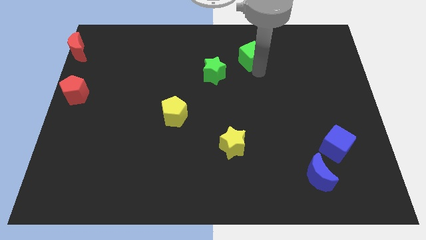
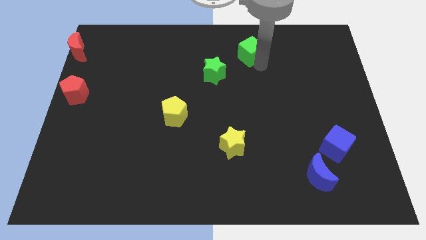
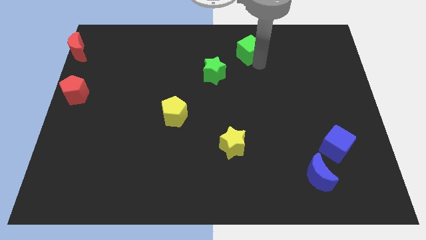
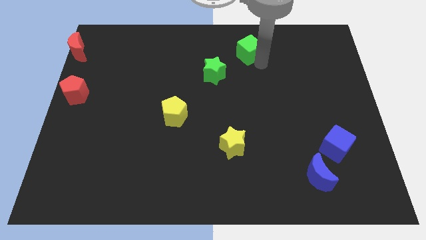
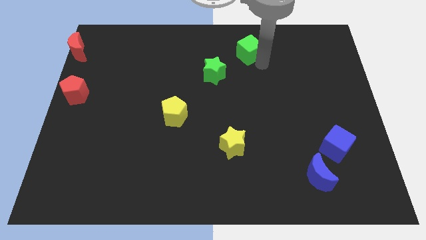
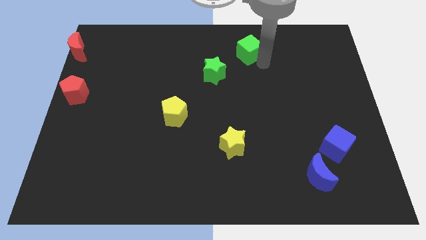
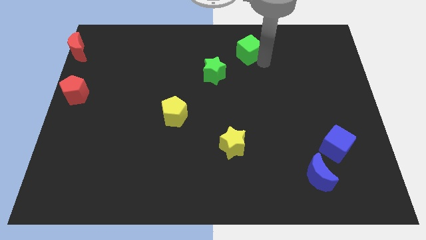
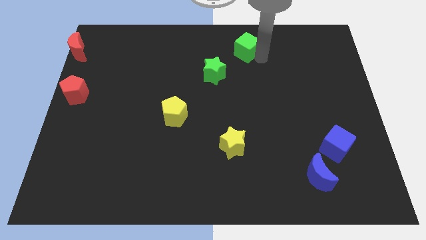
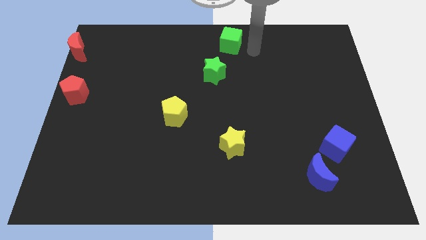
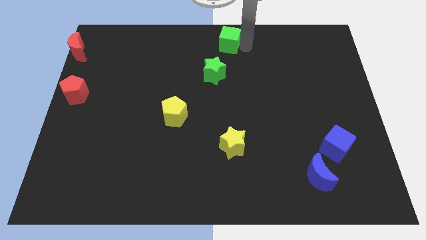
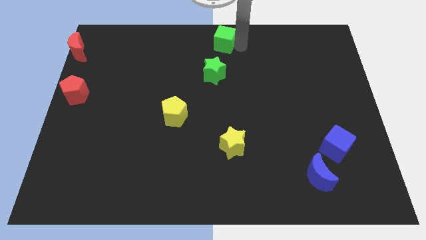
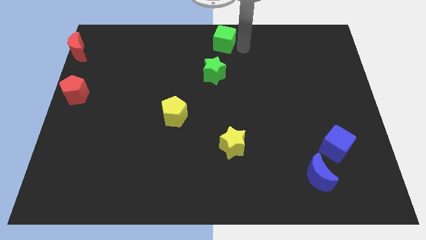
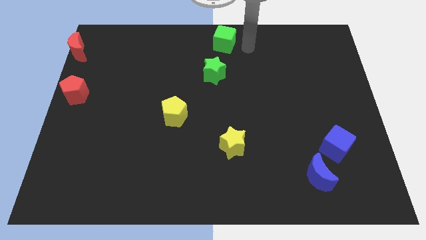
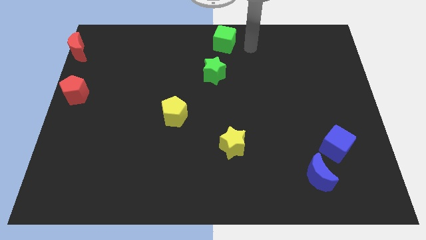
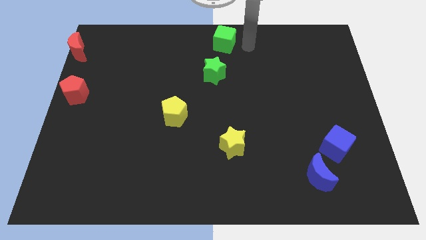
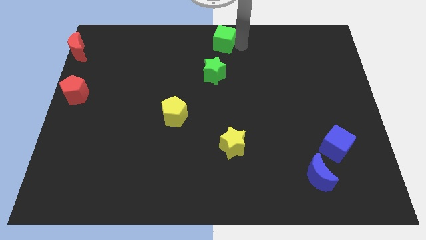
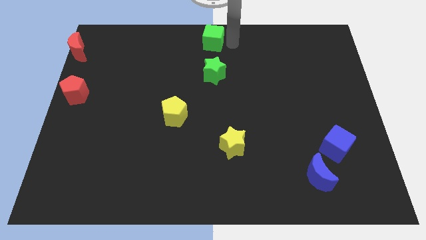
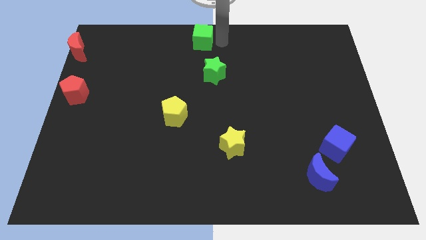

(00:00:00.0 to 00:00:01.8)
place the green cube above the green star

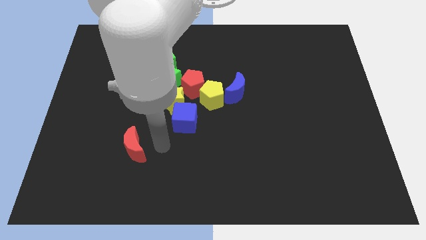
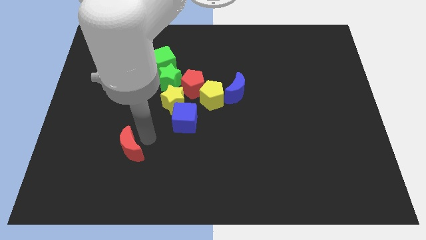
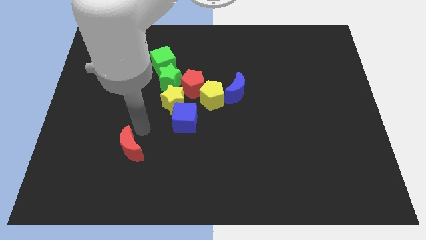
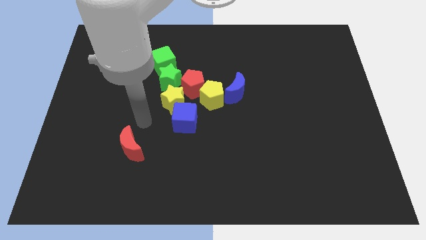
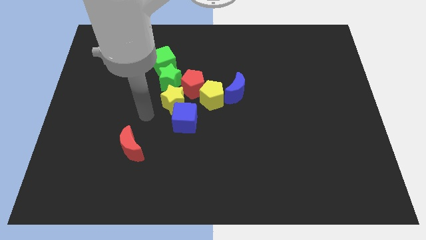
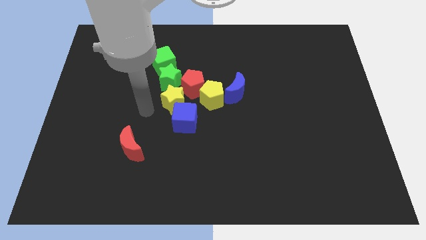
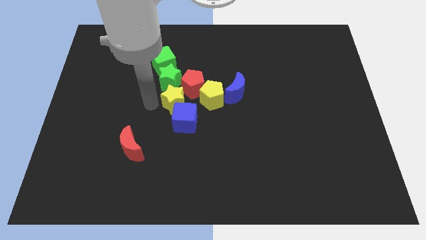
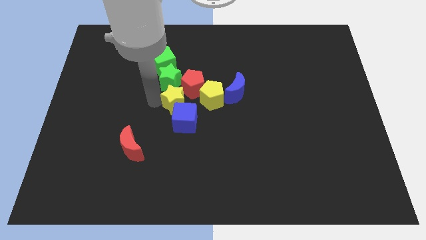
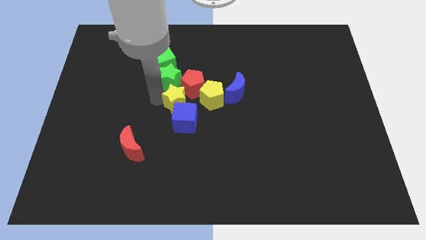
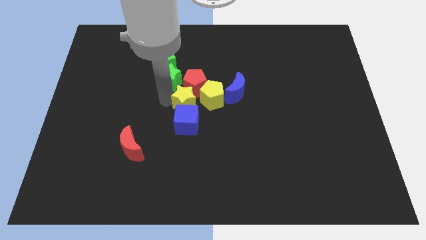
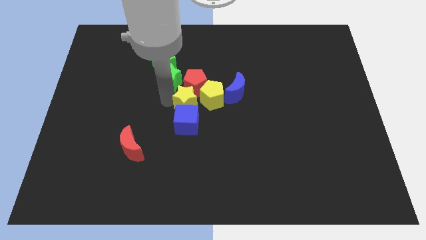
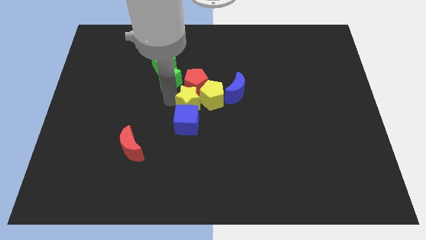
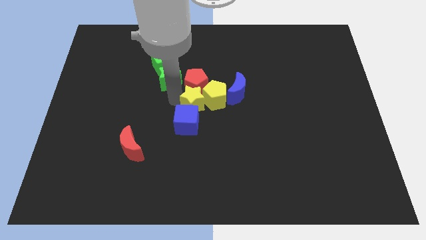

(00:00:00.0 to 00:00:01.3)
place the arm to the left side of the yellow star

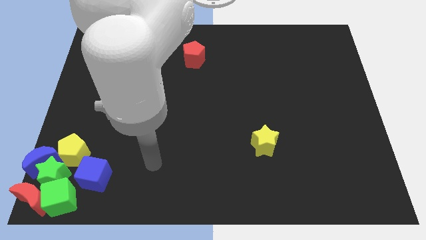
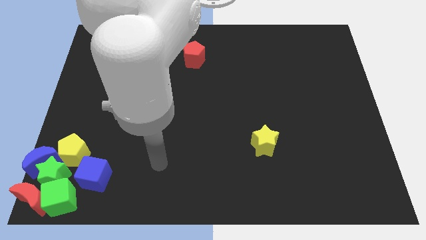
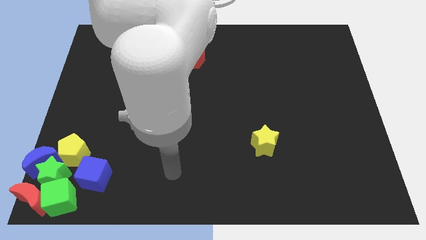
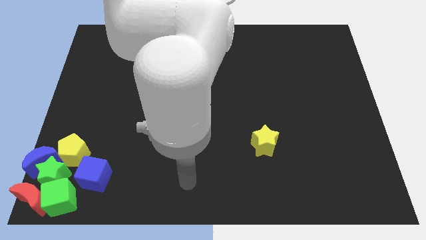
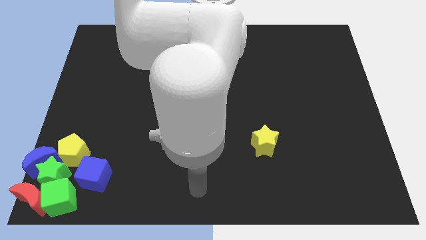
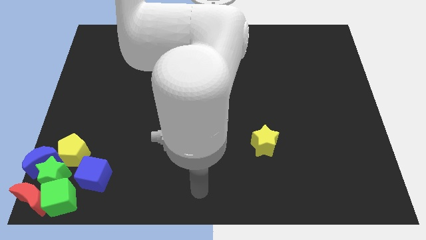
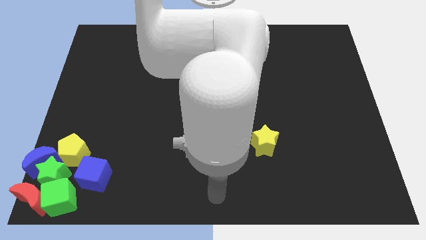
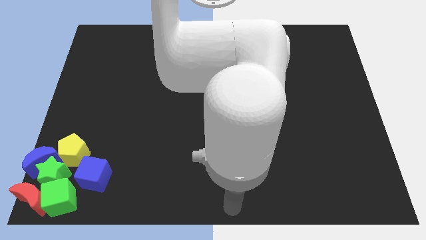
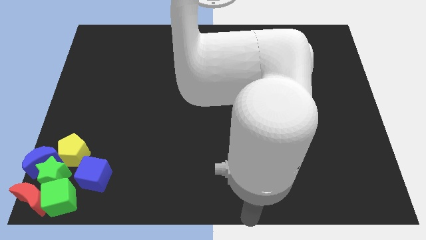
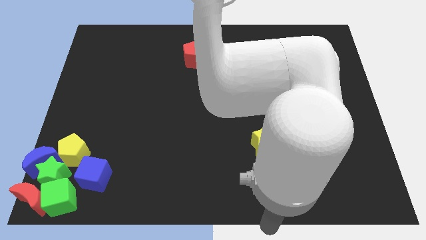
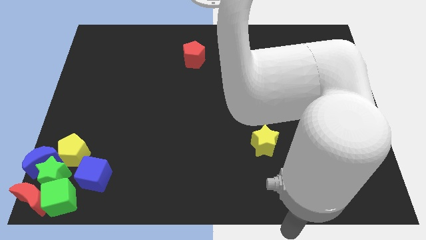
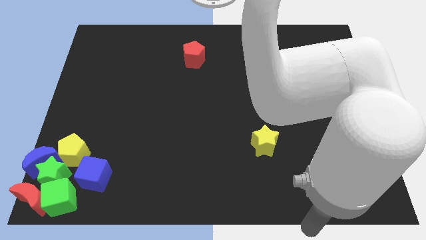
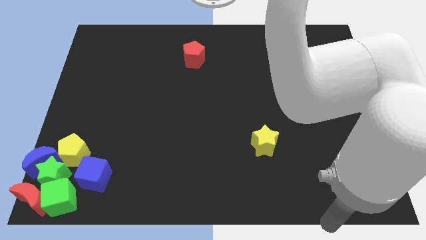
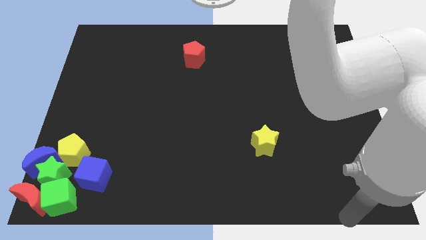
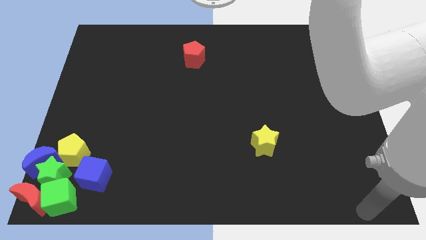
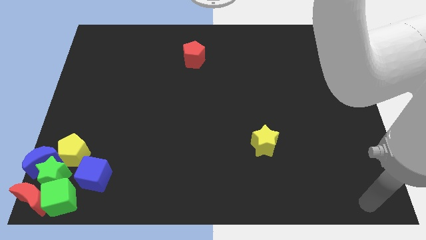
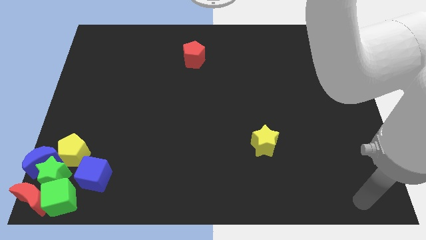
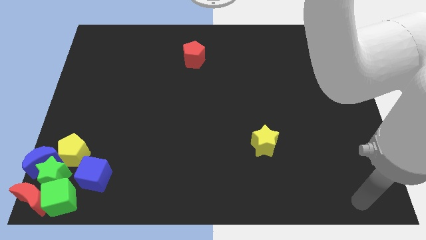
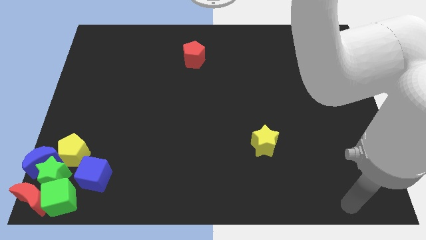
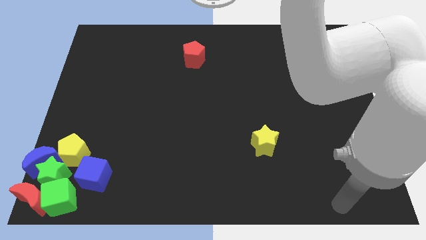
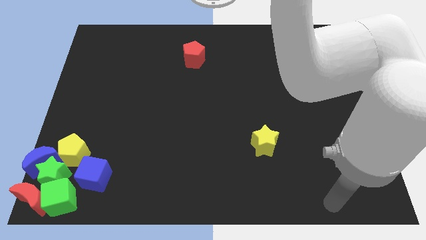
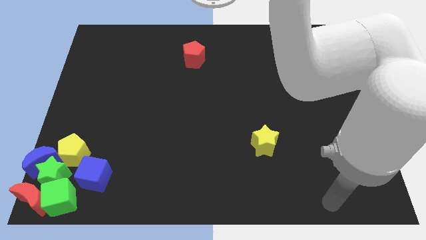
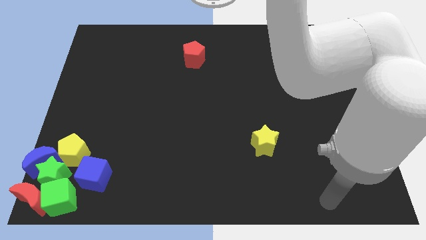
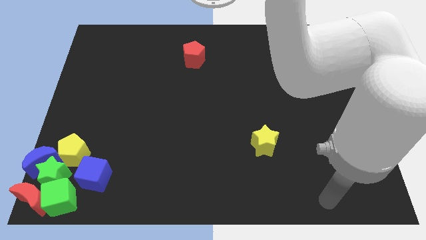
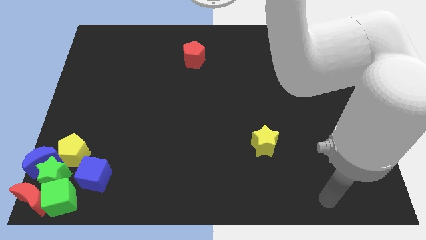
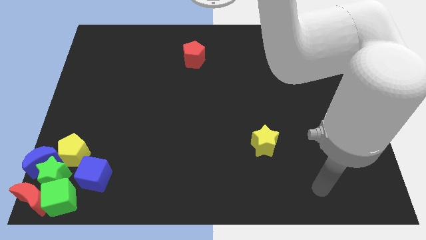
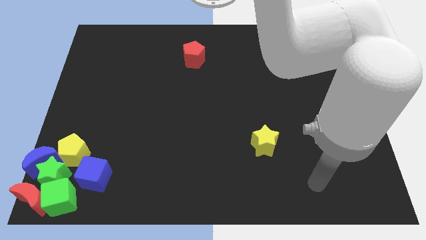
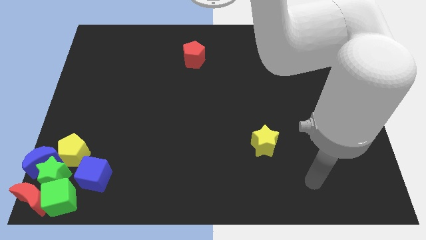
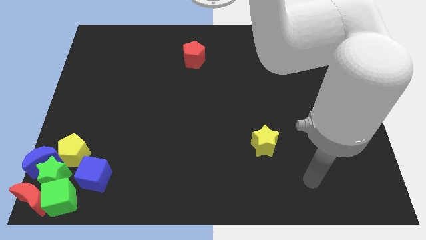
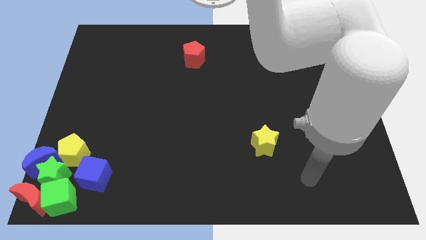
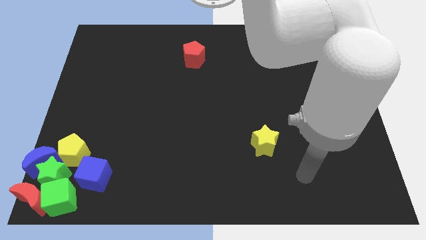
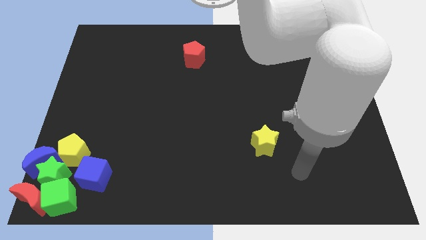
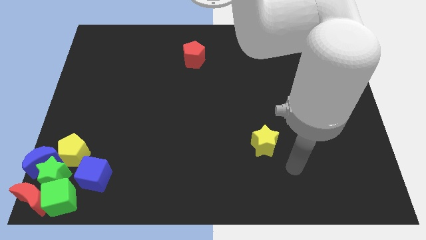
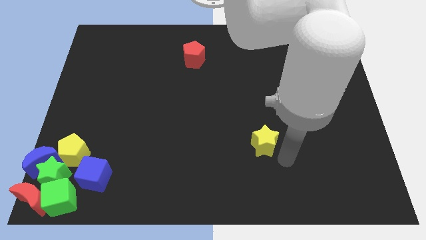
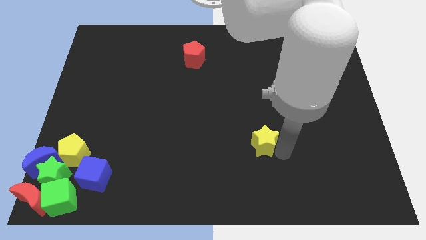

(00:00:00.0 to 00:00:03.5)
place the arm near the yellow star

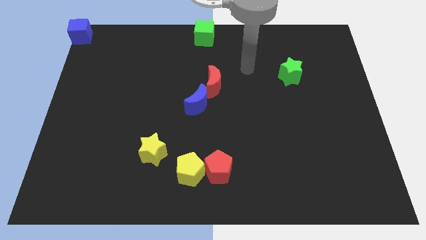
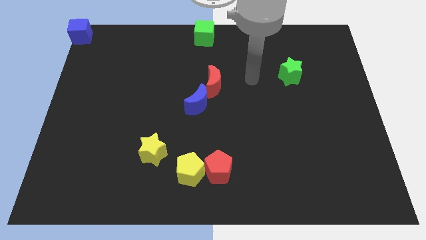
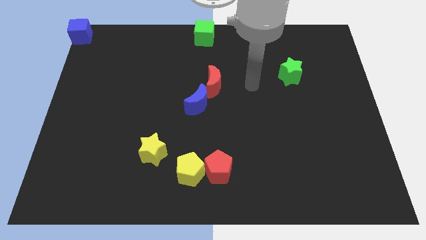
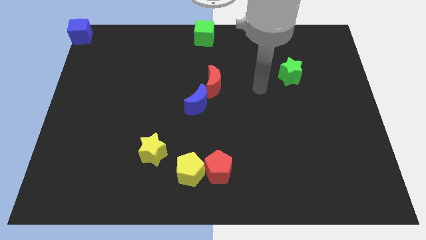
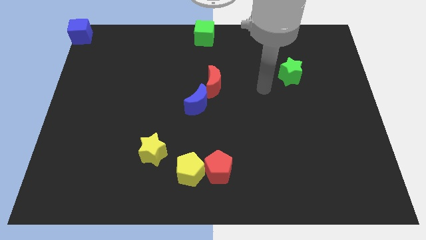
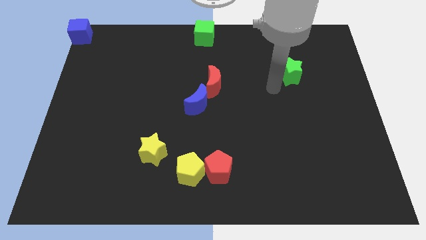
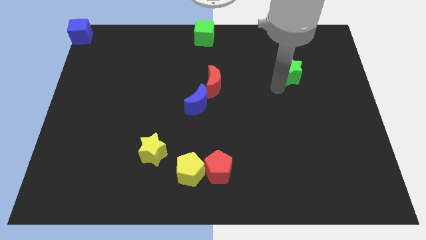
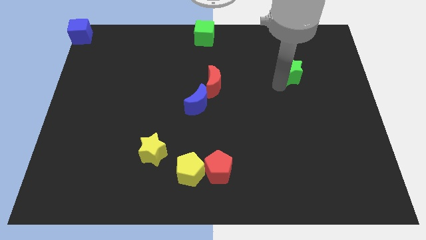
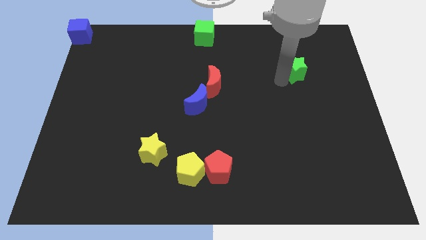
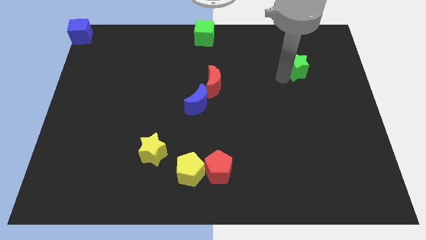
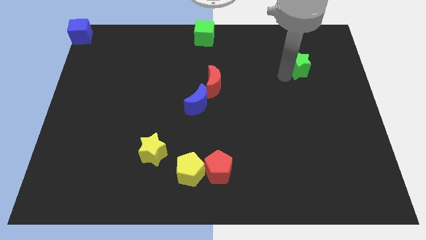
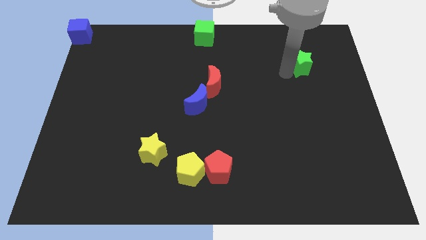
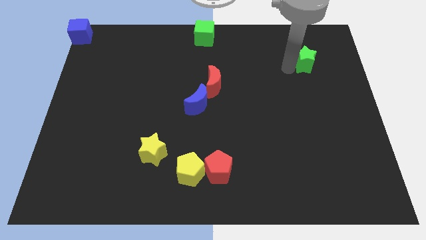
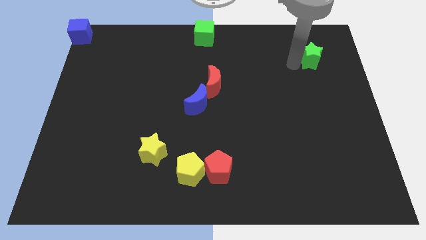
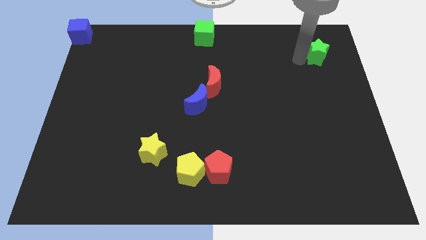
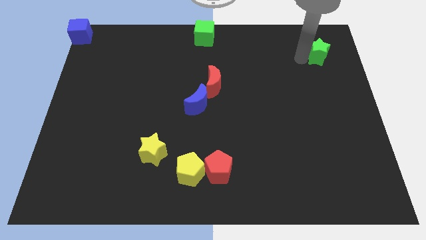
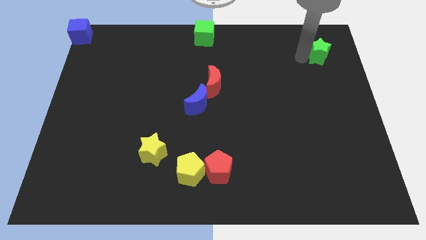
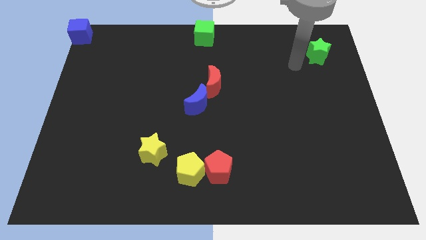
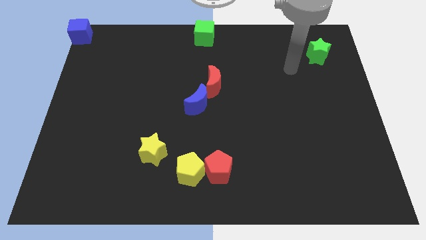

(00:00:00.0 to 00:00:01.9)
move the green star to the top right side

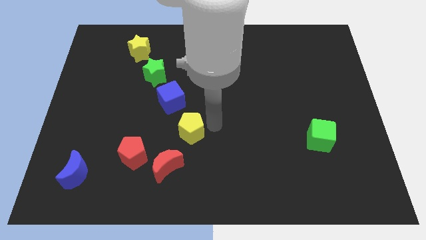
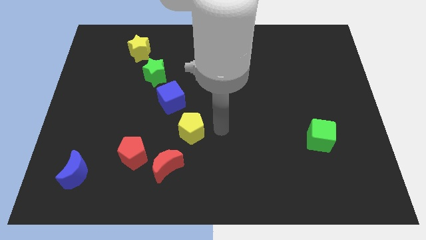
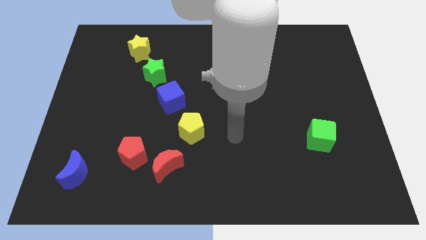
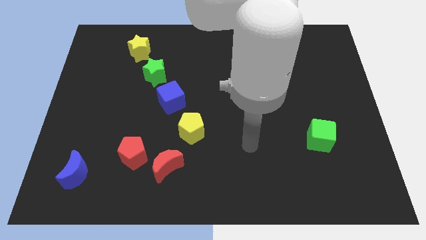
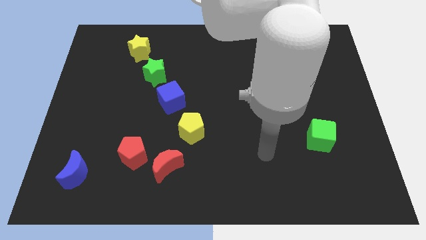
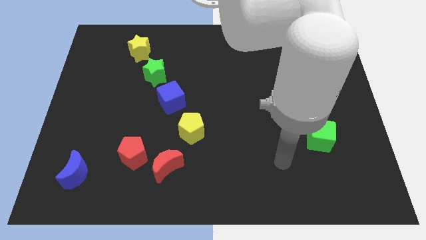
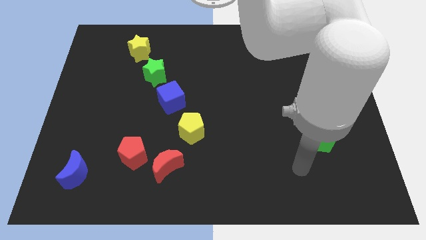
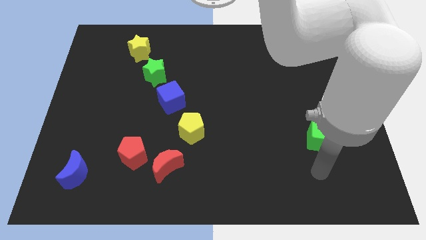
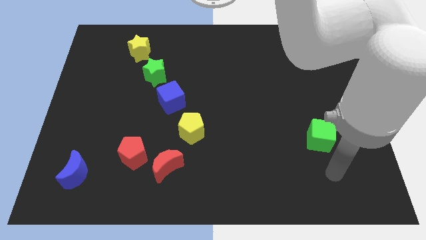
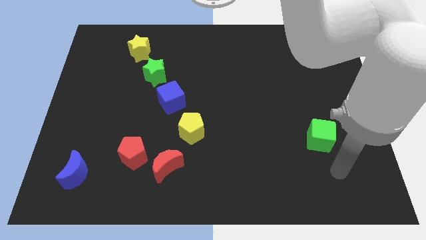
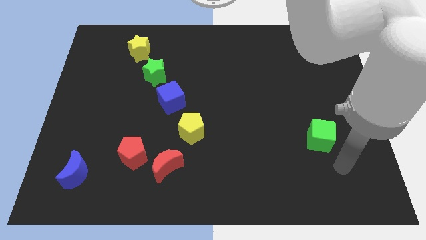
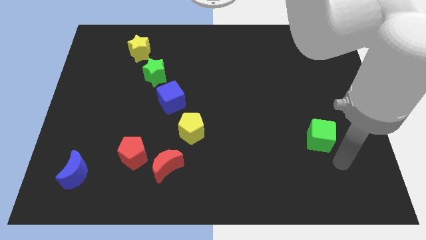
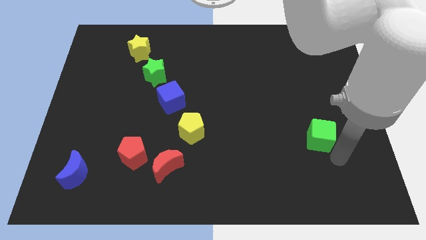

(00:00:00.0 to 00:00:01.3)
move your arm away from the yellow pentagon
